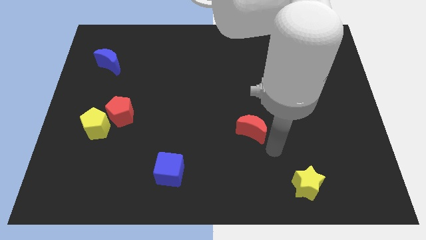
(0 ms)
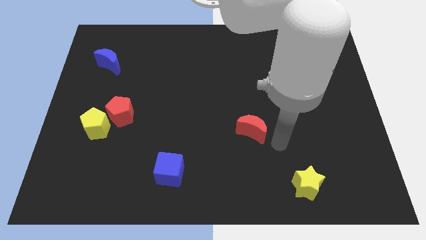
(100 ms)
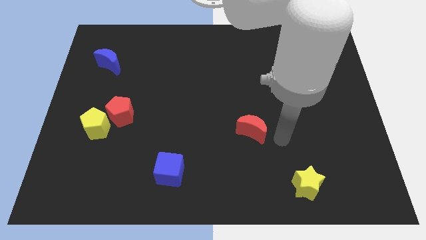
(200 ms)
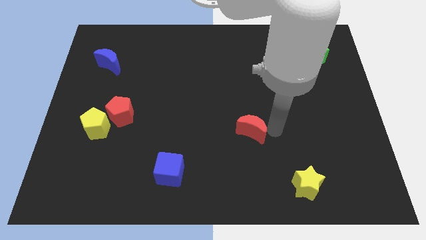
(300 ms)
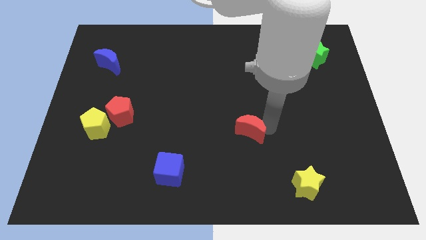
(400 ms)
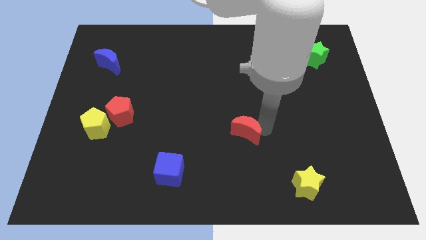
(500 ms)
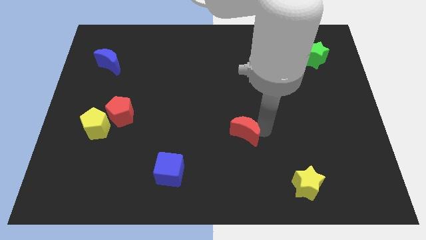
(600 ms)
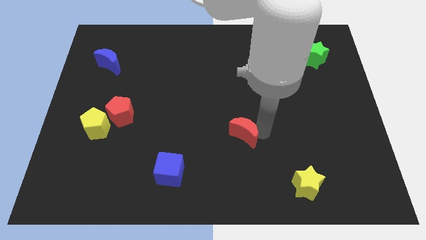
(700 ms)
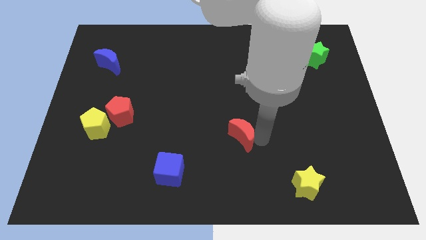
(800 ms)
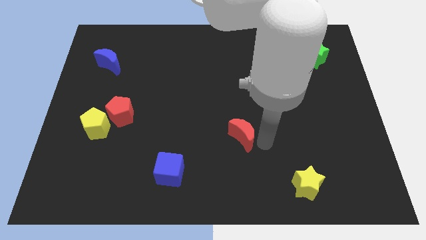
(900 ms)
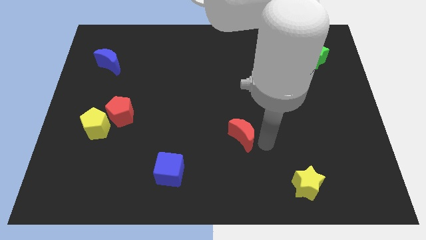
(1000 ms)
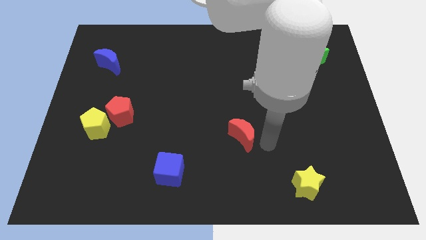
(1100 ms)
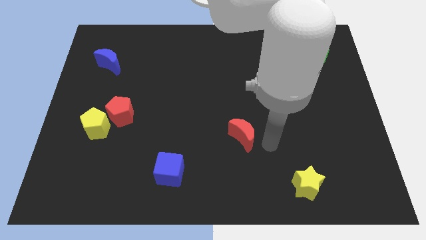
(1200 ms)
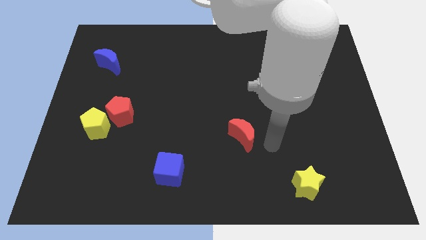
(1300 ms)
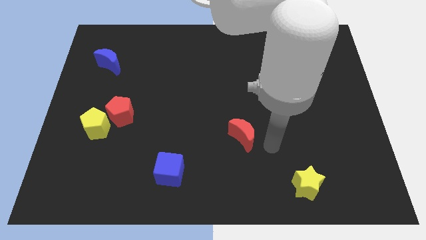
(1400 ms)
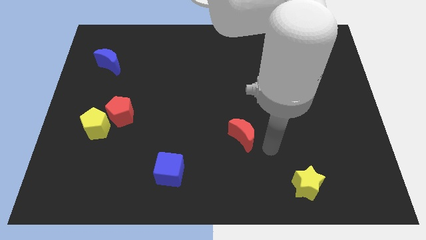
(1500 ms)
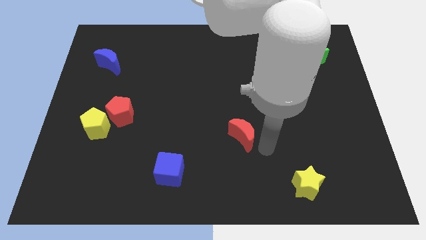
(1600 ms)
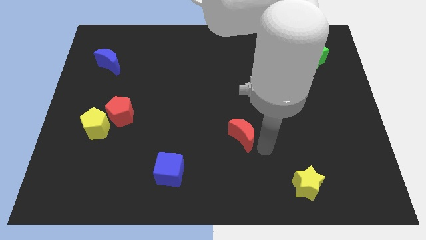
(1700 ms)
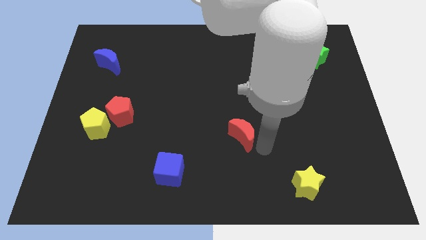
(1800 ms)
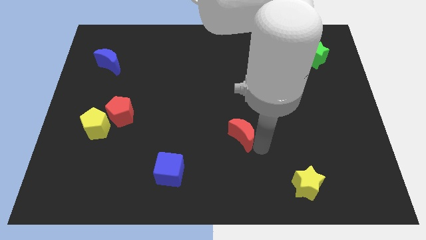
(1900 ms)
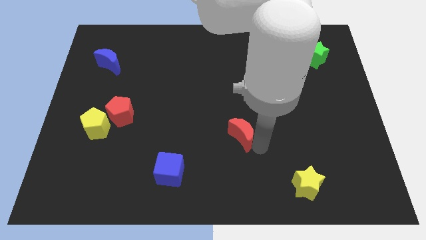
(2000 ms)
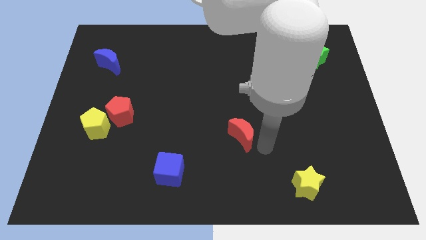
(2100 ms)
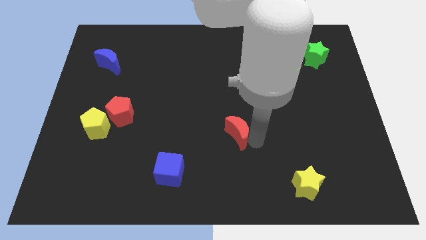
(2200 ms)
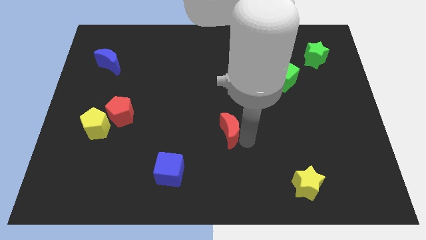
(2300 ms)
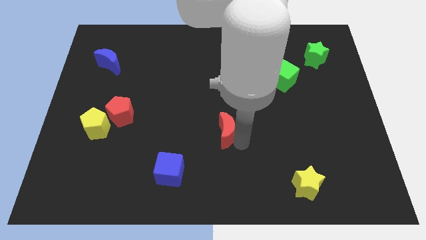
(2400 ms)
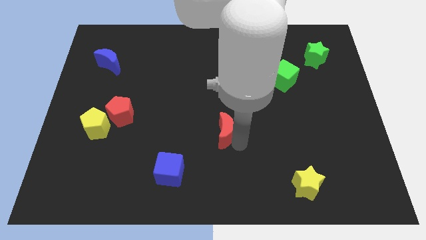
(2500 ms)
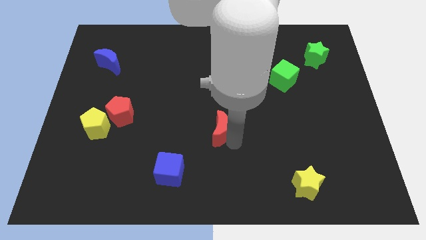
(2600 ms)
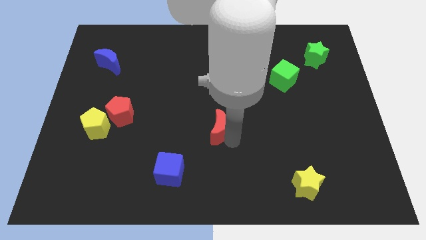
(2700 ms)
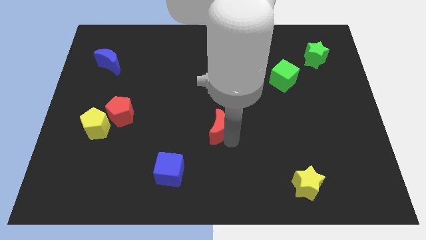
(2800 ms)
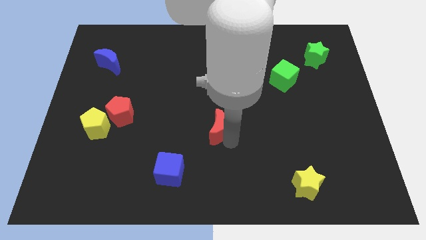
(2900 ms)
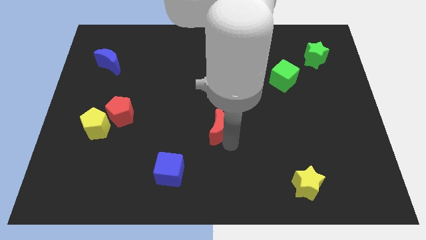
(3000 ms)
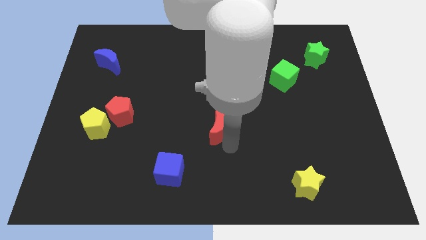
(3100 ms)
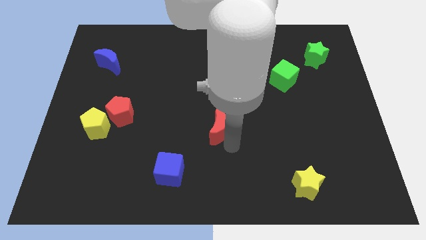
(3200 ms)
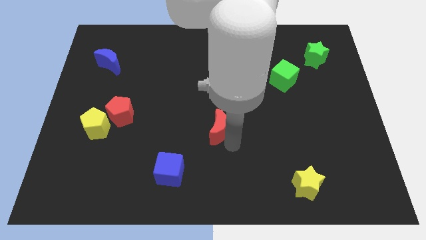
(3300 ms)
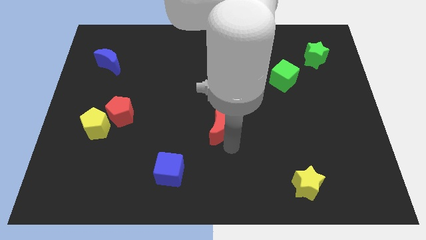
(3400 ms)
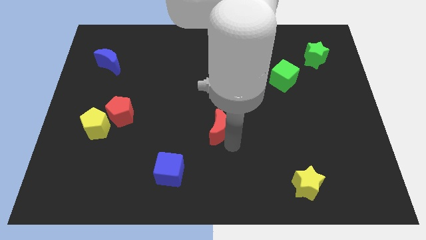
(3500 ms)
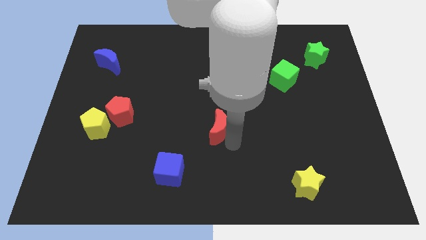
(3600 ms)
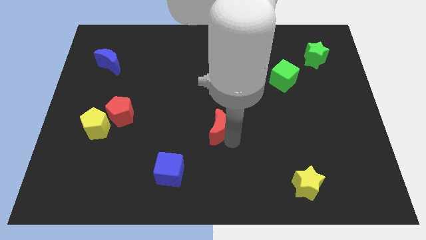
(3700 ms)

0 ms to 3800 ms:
push the red moon slightly to the left

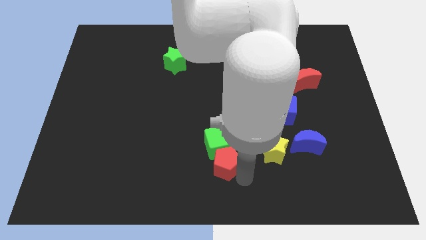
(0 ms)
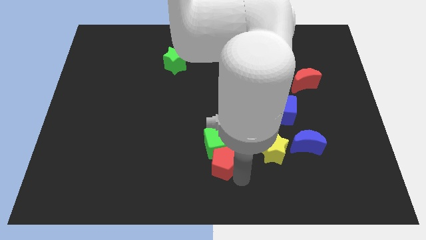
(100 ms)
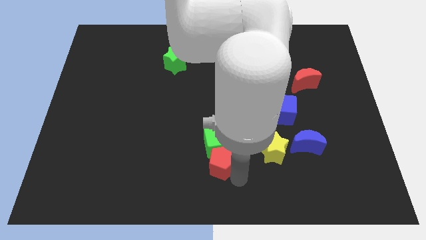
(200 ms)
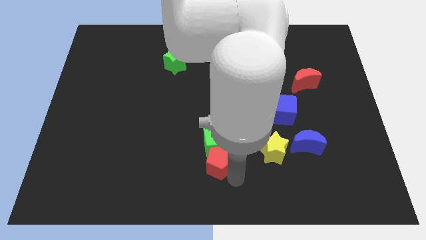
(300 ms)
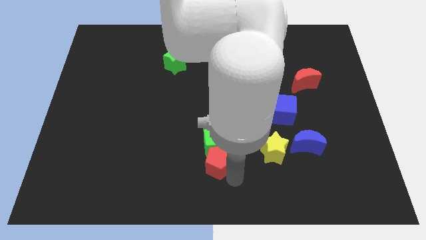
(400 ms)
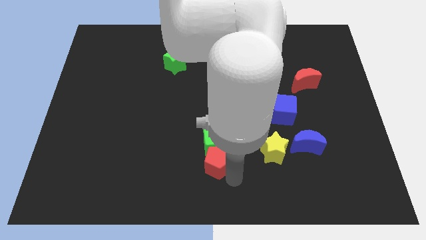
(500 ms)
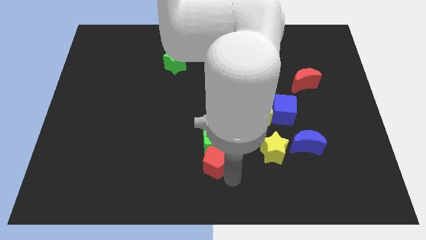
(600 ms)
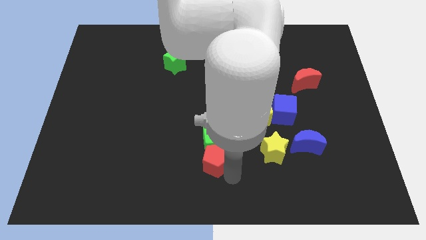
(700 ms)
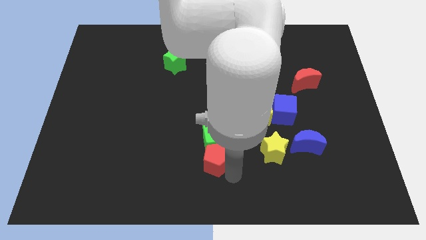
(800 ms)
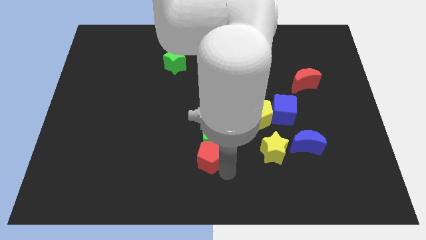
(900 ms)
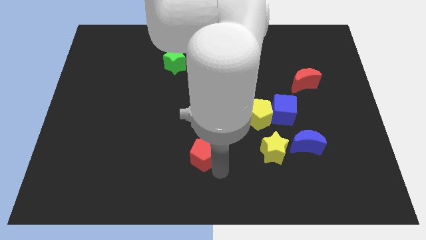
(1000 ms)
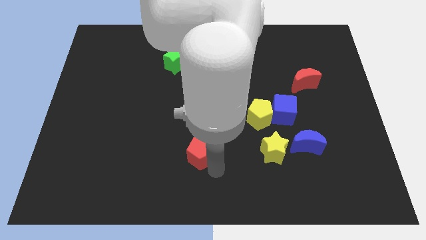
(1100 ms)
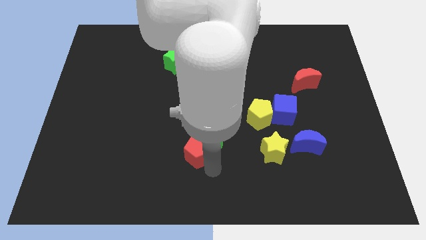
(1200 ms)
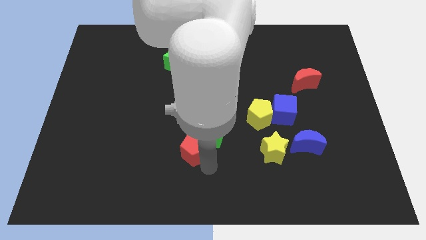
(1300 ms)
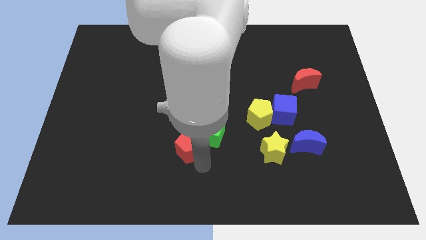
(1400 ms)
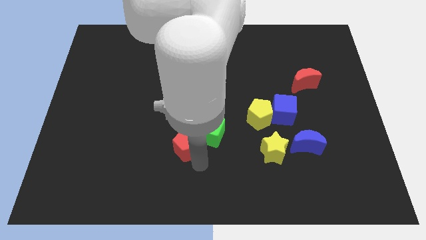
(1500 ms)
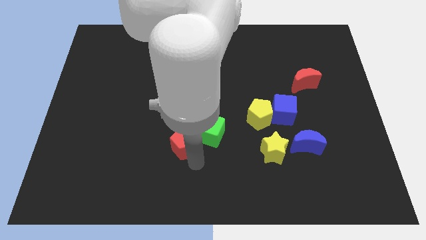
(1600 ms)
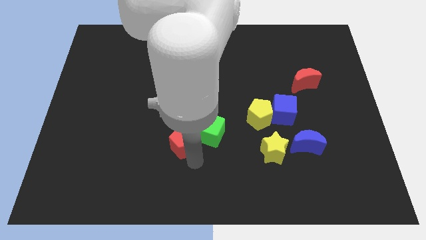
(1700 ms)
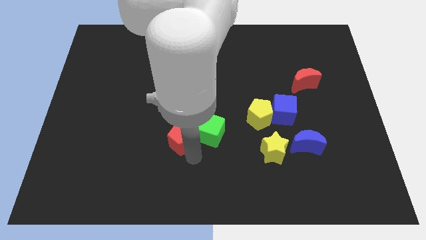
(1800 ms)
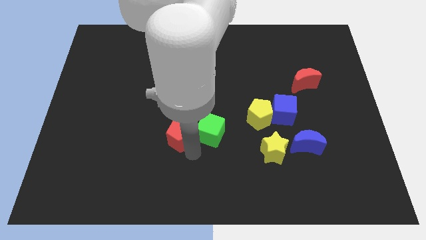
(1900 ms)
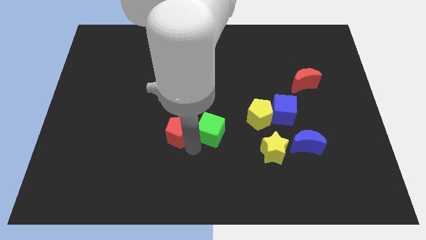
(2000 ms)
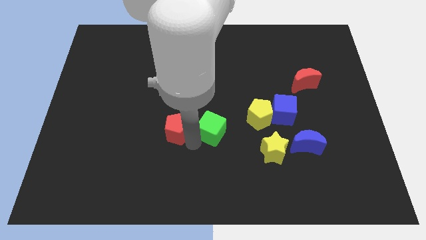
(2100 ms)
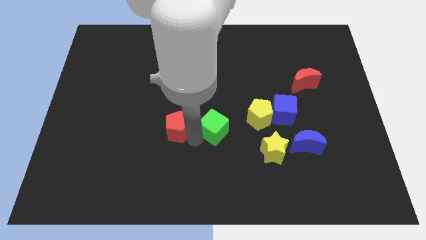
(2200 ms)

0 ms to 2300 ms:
move the red pentagon to the left of the green cube

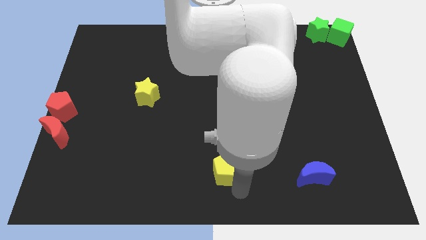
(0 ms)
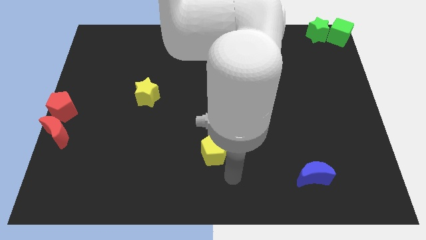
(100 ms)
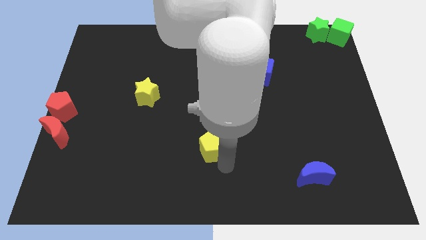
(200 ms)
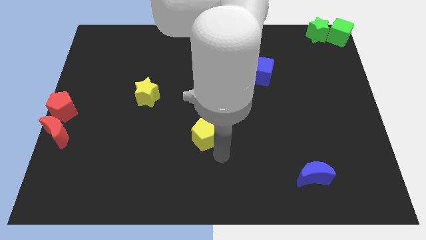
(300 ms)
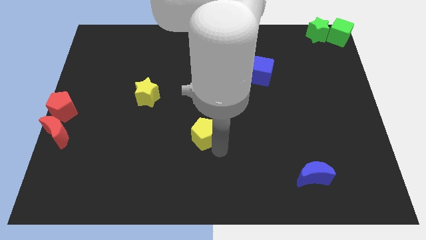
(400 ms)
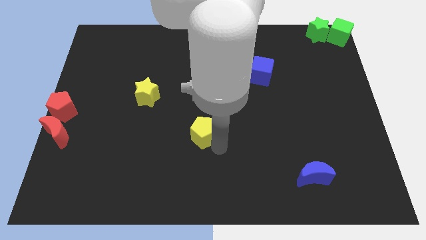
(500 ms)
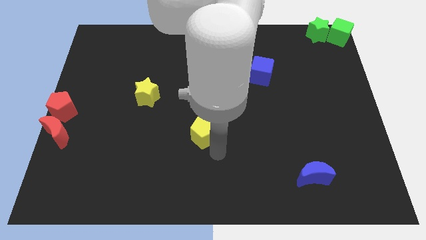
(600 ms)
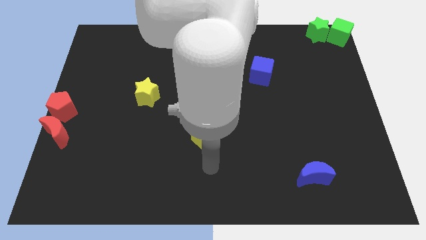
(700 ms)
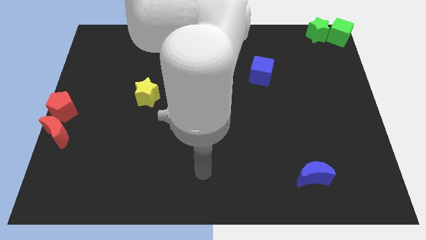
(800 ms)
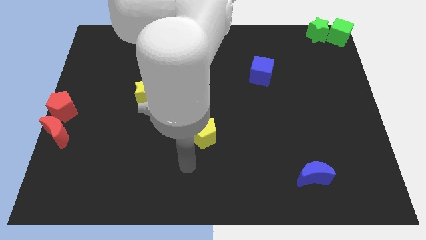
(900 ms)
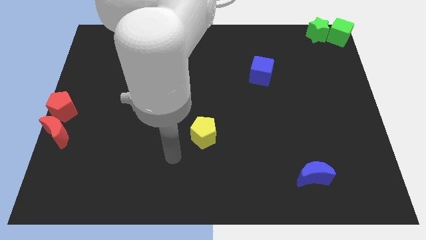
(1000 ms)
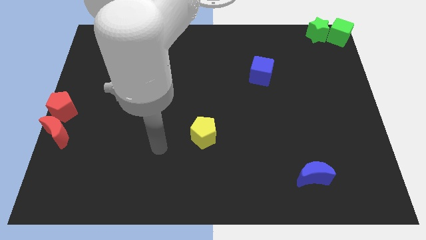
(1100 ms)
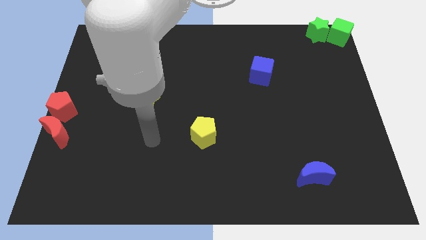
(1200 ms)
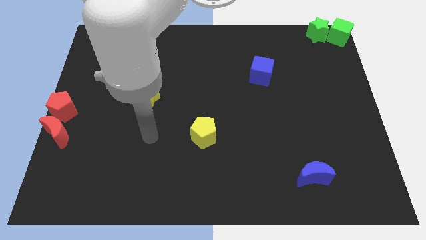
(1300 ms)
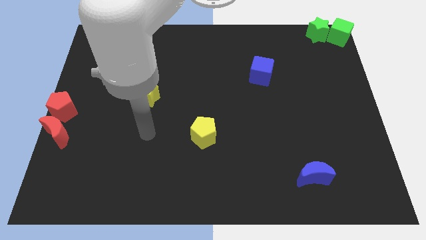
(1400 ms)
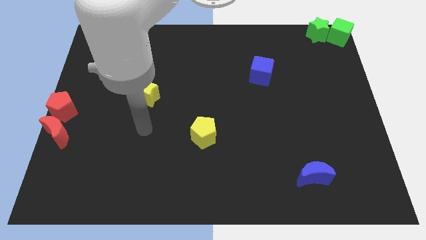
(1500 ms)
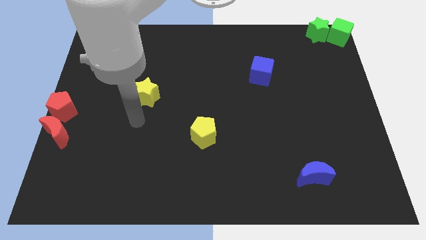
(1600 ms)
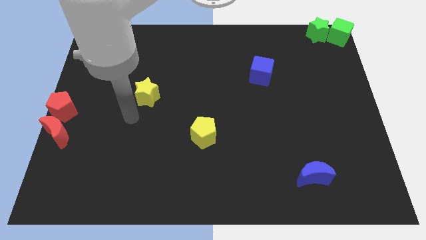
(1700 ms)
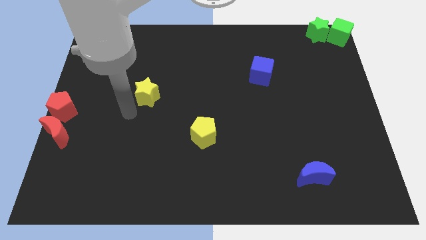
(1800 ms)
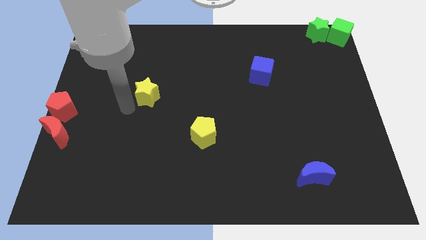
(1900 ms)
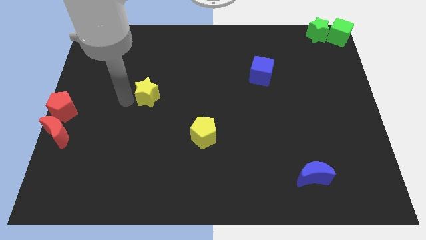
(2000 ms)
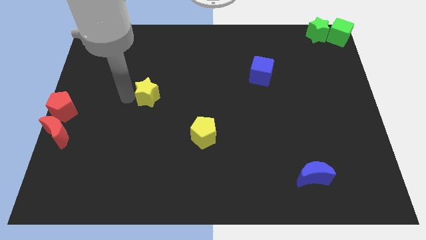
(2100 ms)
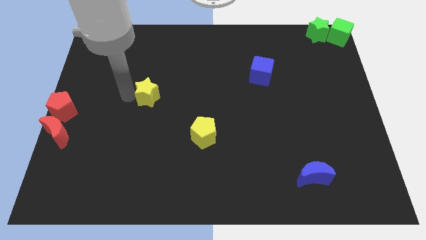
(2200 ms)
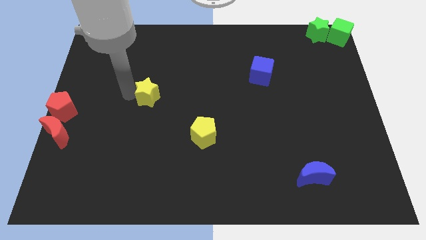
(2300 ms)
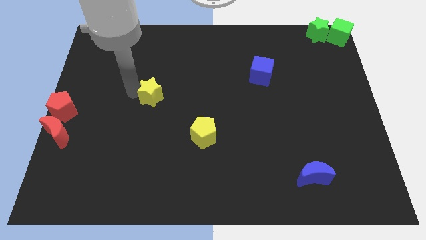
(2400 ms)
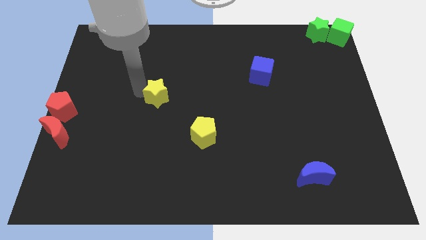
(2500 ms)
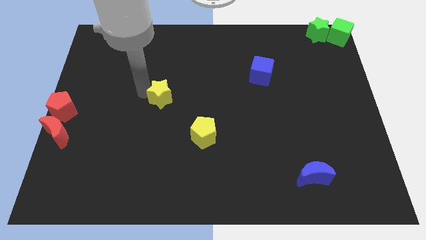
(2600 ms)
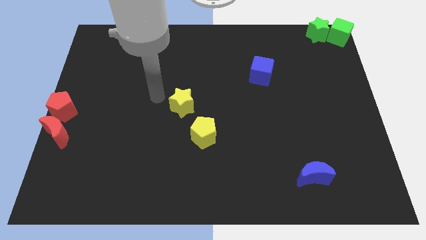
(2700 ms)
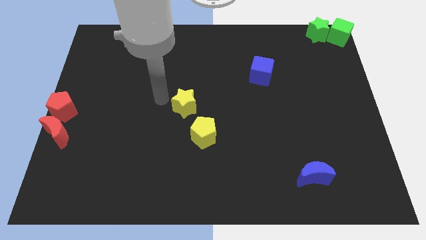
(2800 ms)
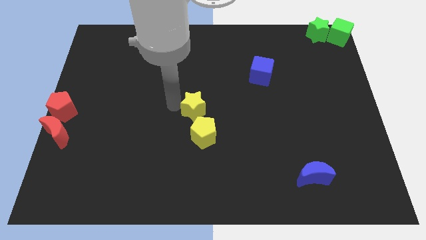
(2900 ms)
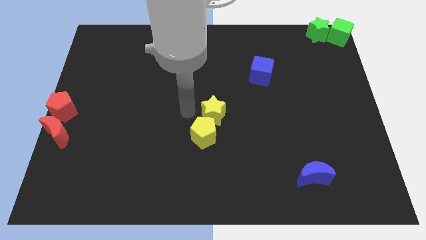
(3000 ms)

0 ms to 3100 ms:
drag the yellow star close to the yellow pentagon
